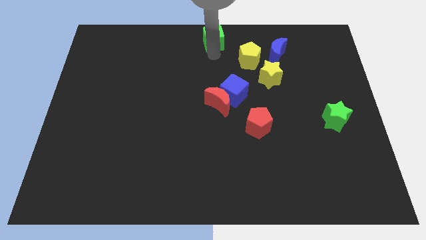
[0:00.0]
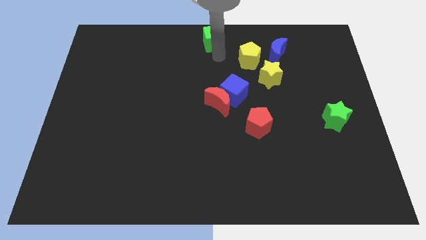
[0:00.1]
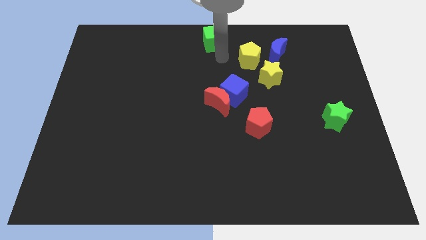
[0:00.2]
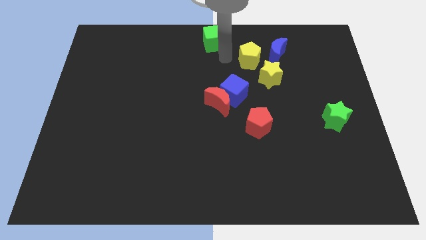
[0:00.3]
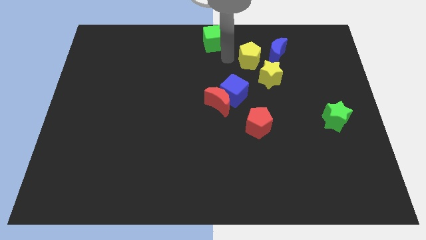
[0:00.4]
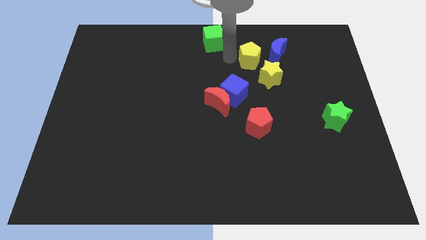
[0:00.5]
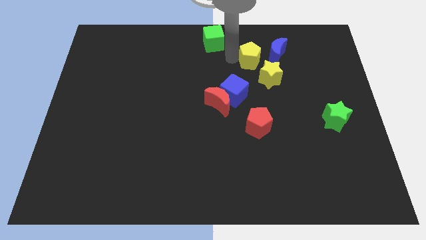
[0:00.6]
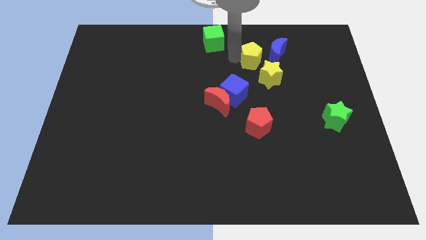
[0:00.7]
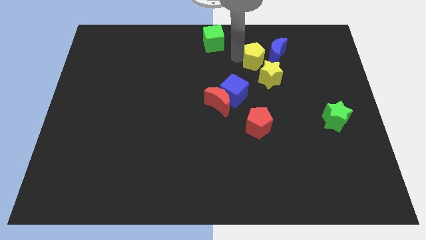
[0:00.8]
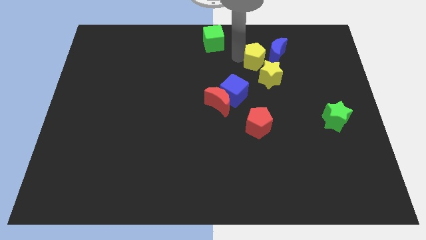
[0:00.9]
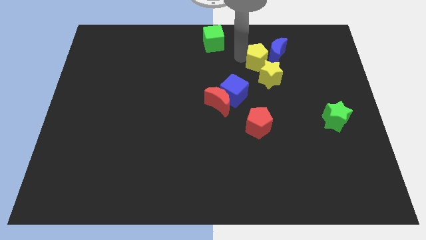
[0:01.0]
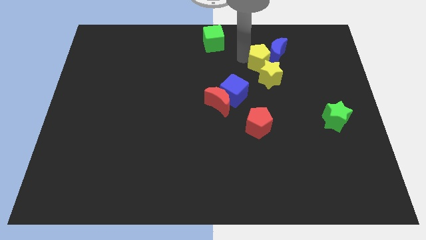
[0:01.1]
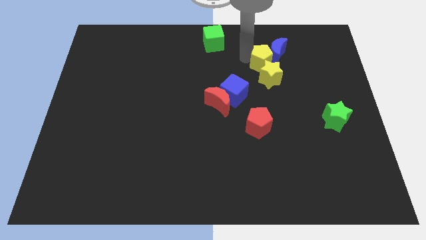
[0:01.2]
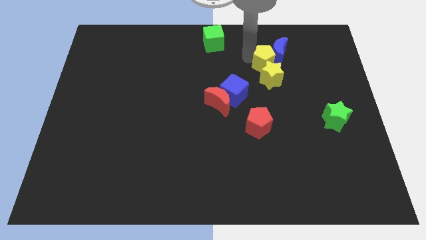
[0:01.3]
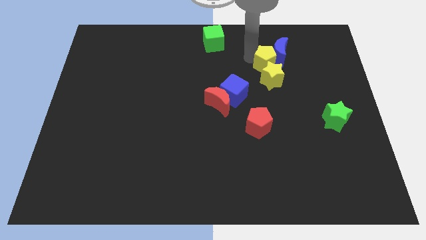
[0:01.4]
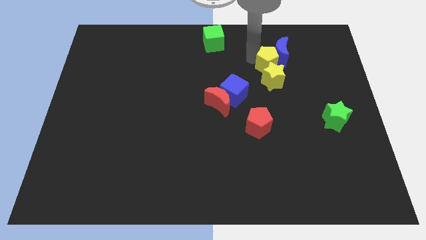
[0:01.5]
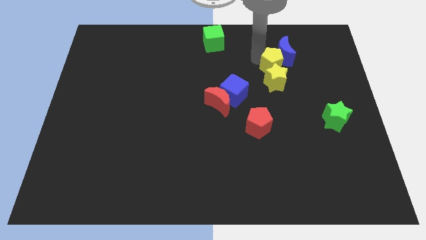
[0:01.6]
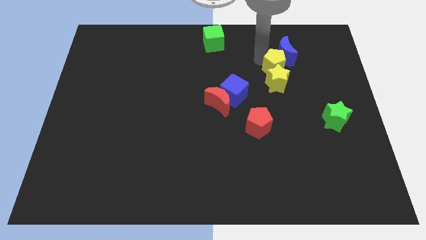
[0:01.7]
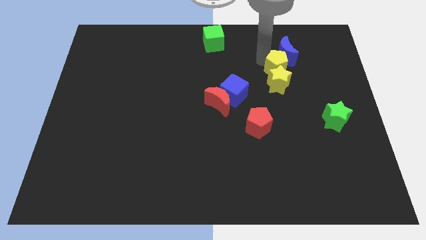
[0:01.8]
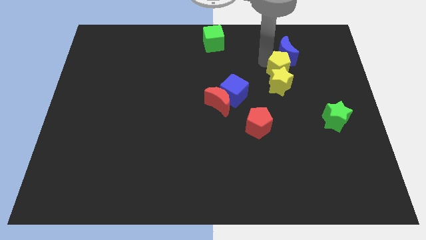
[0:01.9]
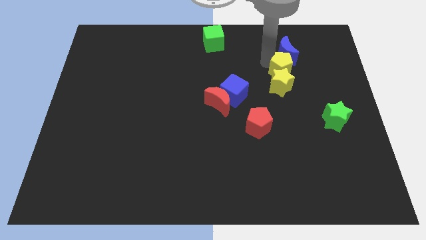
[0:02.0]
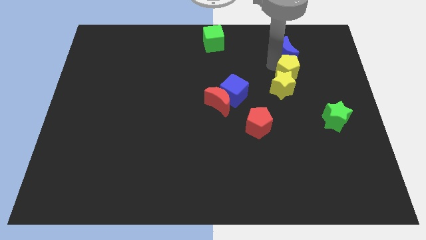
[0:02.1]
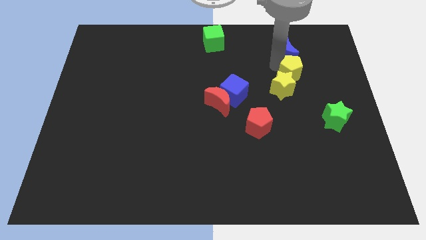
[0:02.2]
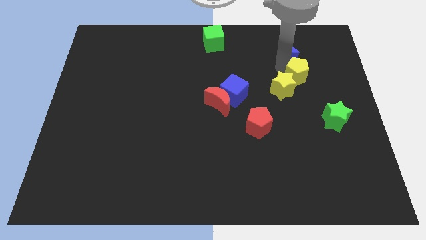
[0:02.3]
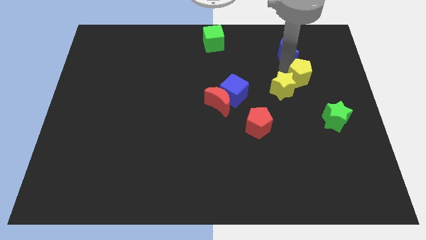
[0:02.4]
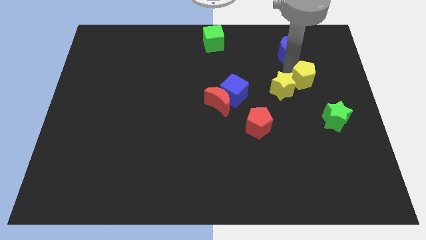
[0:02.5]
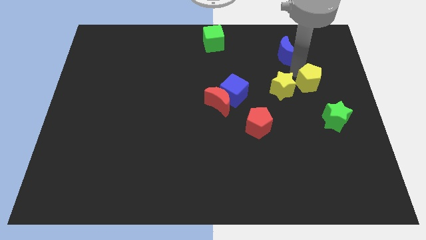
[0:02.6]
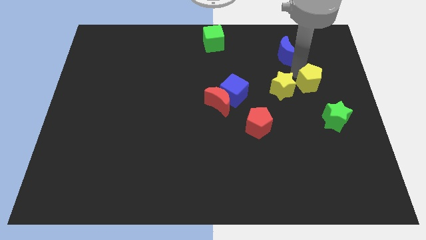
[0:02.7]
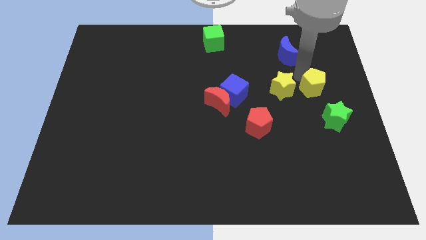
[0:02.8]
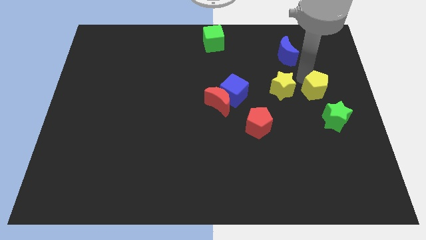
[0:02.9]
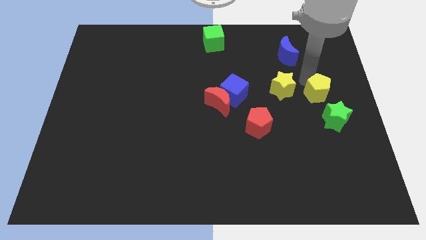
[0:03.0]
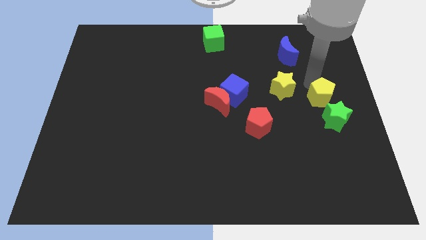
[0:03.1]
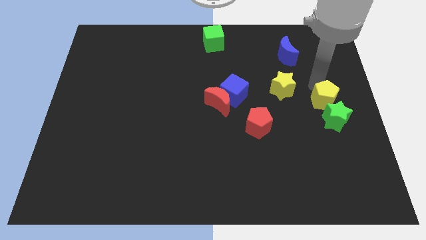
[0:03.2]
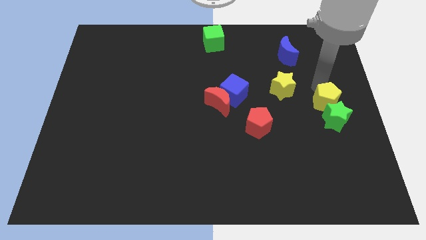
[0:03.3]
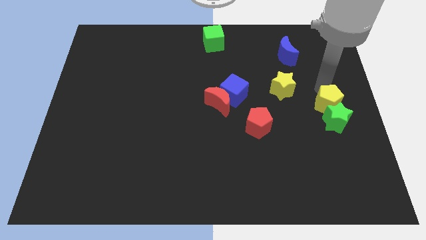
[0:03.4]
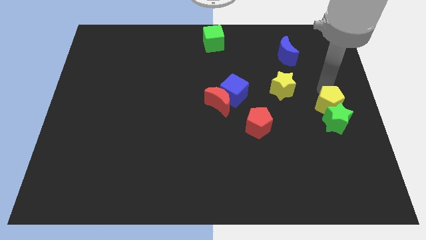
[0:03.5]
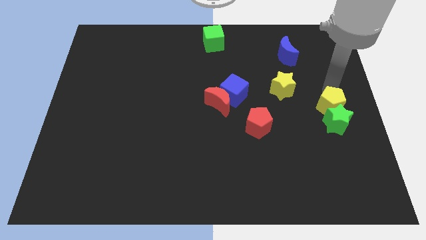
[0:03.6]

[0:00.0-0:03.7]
move yellow pentagon into green star

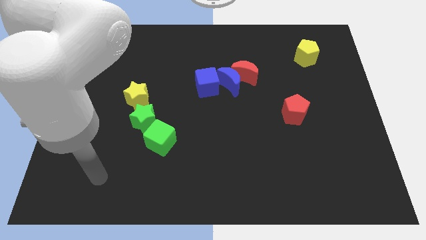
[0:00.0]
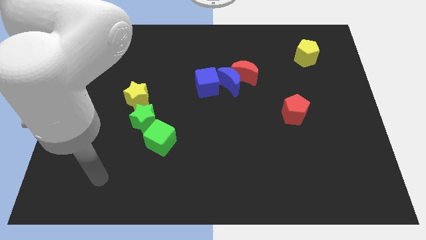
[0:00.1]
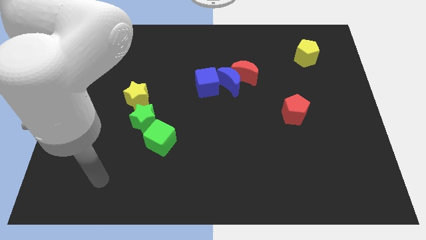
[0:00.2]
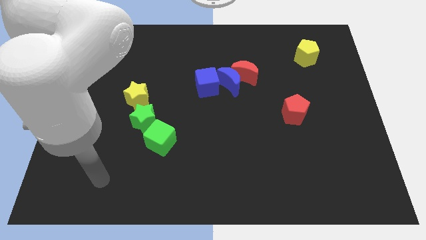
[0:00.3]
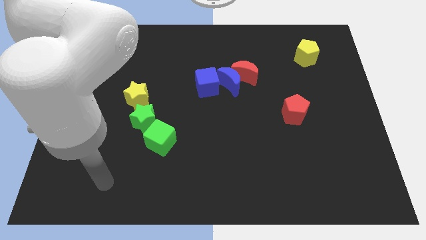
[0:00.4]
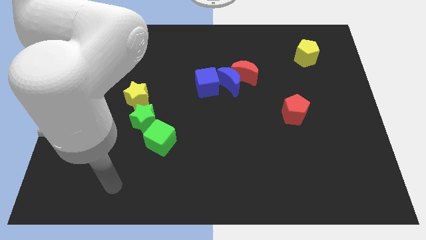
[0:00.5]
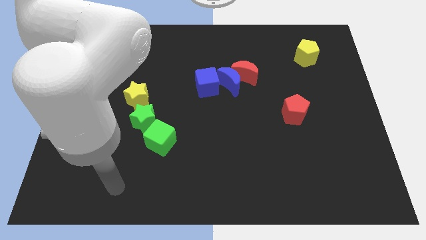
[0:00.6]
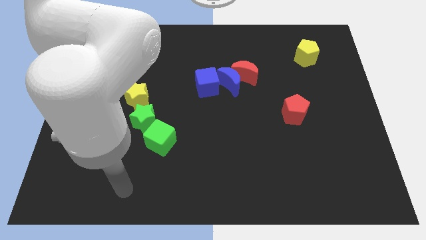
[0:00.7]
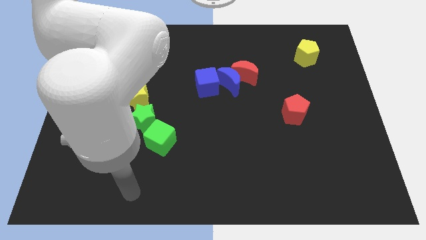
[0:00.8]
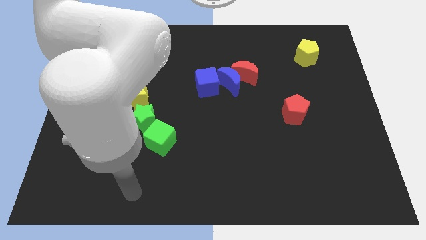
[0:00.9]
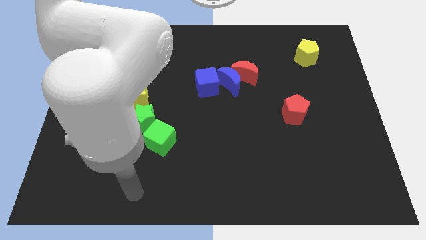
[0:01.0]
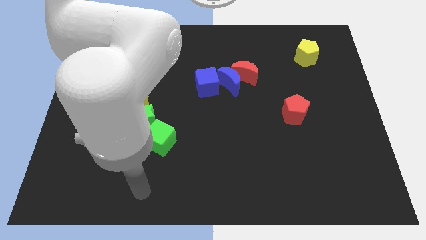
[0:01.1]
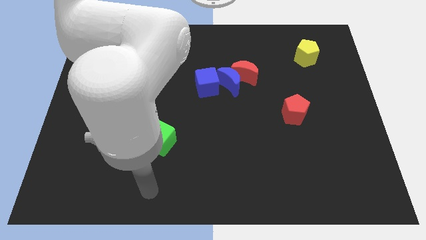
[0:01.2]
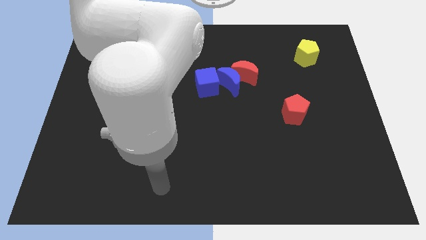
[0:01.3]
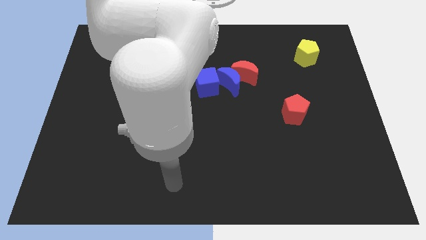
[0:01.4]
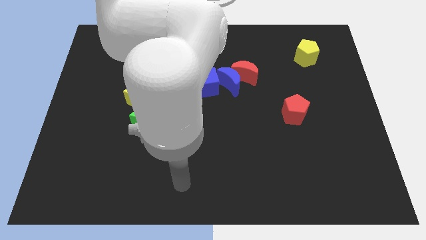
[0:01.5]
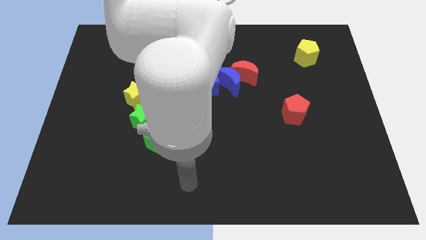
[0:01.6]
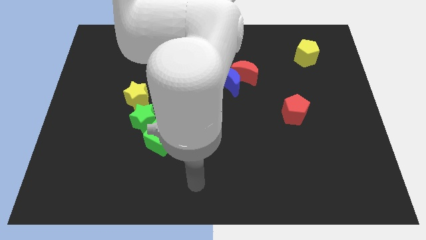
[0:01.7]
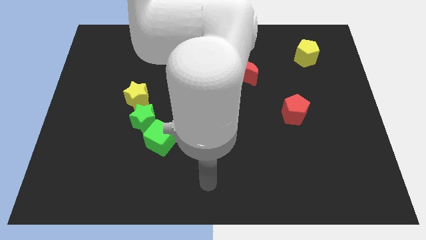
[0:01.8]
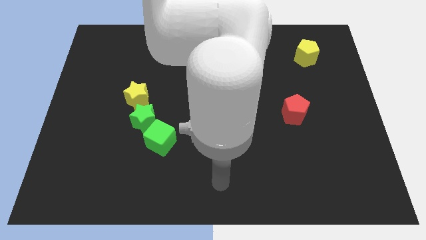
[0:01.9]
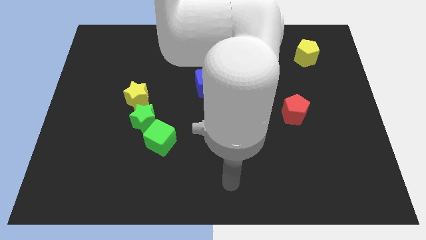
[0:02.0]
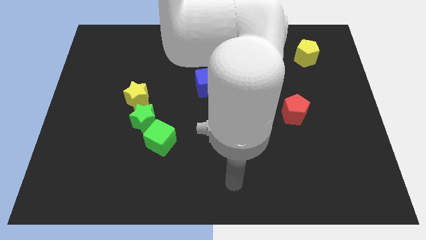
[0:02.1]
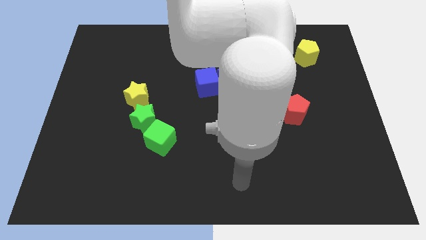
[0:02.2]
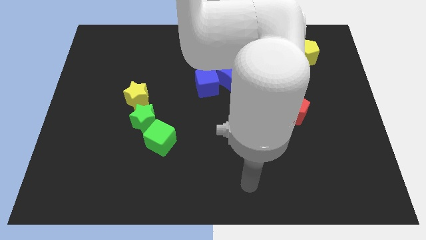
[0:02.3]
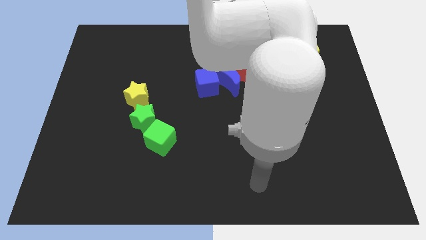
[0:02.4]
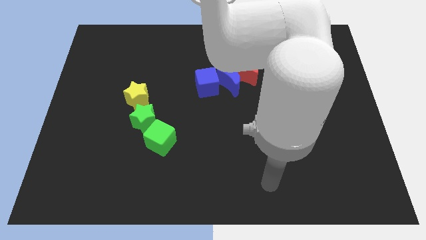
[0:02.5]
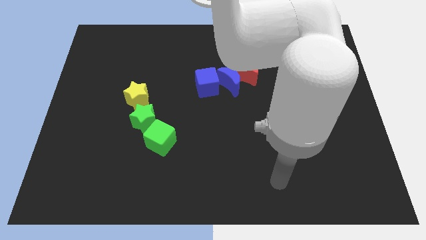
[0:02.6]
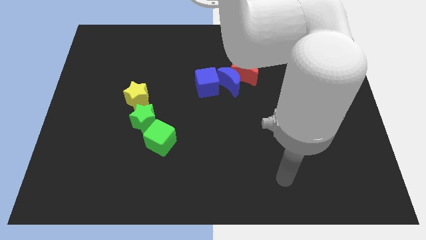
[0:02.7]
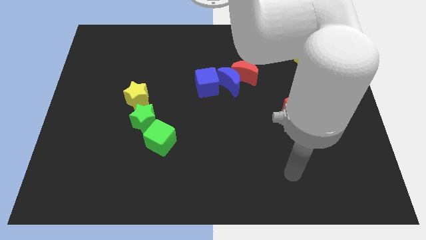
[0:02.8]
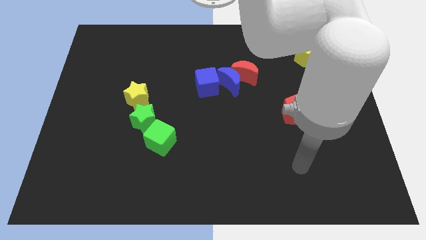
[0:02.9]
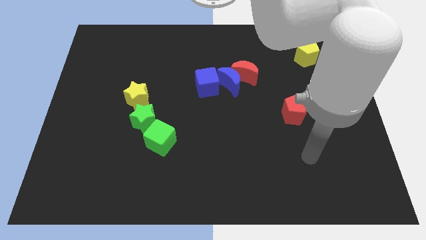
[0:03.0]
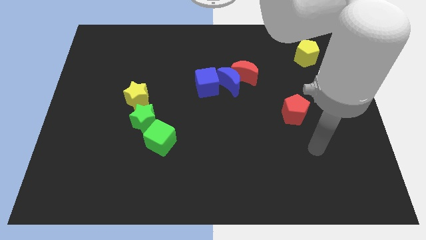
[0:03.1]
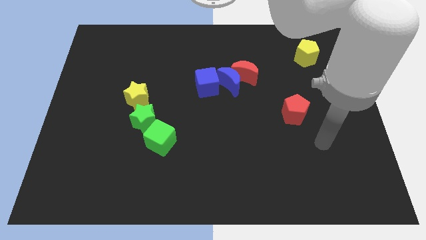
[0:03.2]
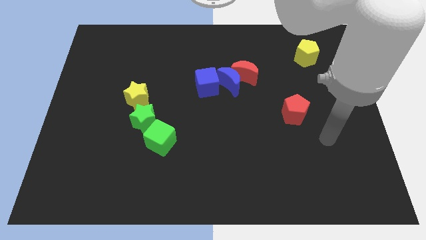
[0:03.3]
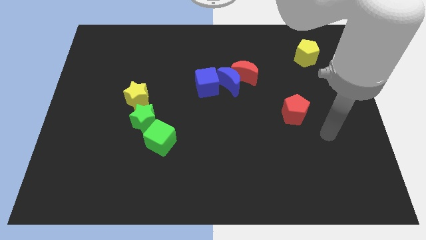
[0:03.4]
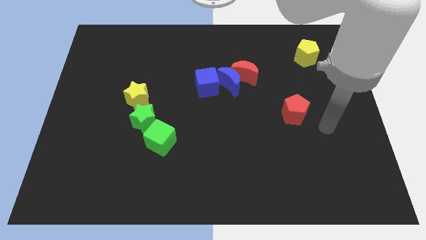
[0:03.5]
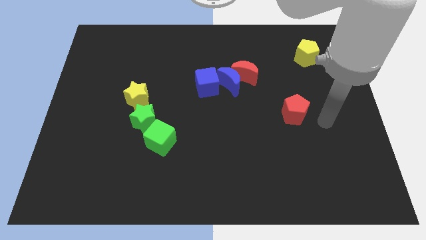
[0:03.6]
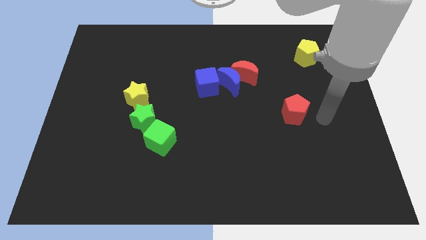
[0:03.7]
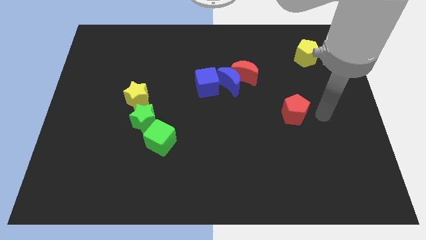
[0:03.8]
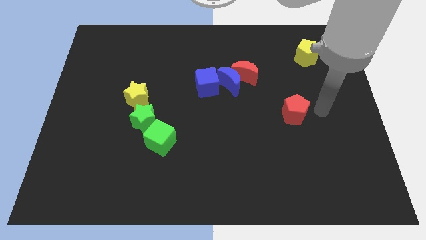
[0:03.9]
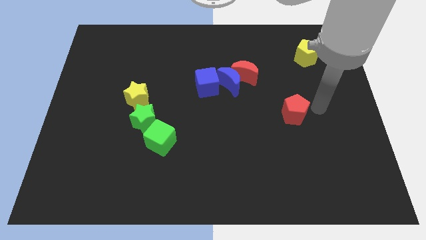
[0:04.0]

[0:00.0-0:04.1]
point the arm to the right of the red pentagon

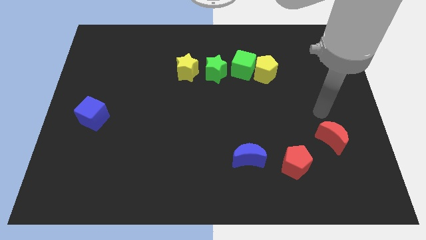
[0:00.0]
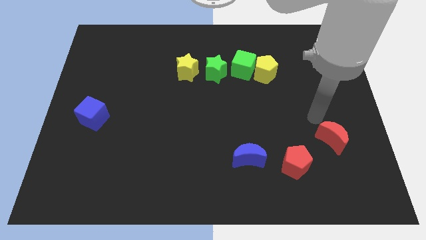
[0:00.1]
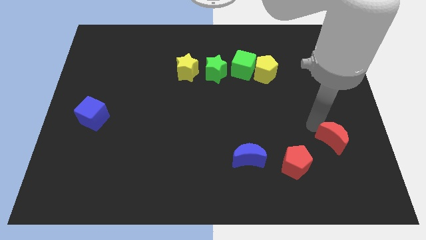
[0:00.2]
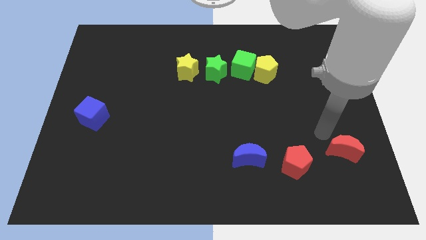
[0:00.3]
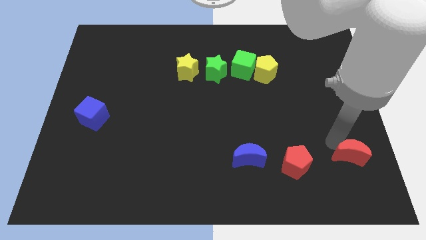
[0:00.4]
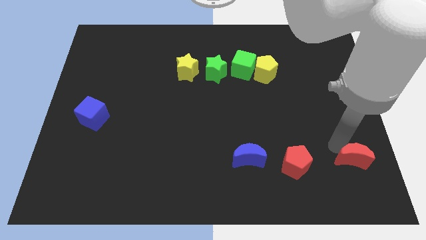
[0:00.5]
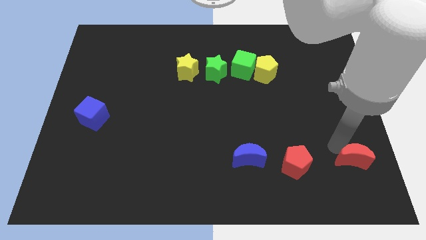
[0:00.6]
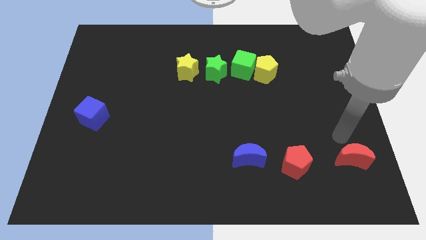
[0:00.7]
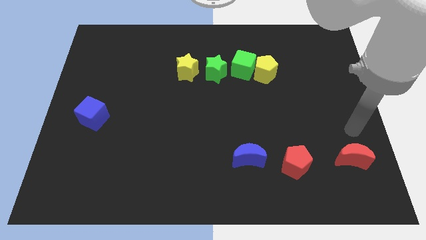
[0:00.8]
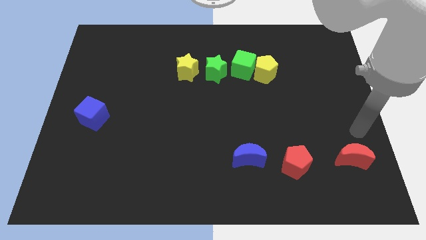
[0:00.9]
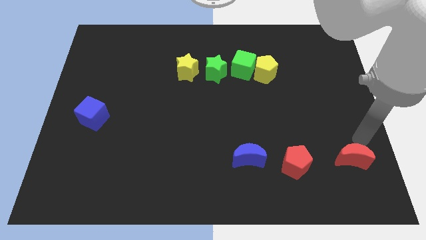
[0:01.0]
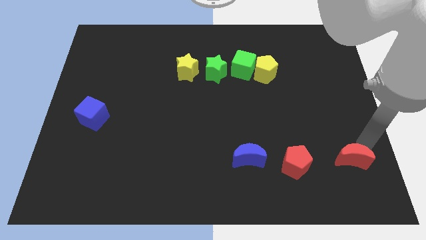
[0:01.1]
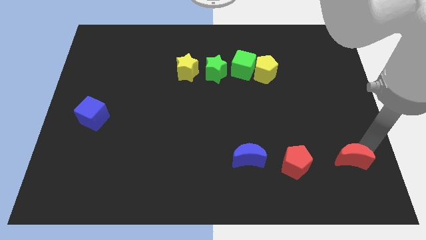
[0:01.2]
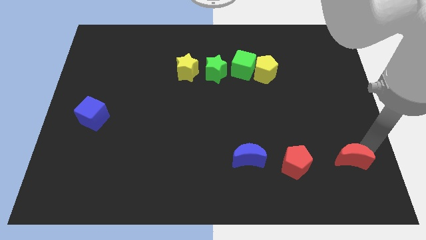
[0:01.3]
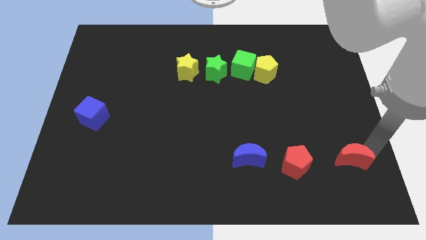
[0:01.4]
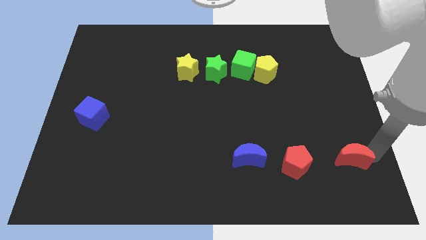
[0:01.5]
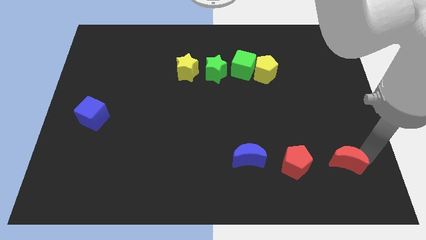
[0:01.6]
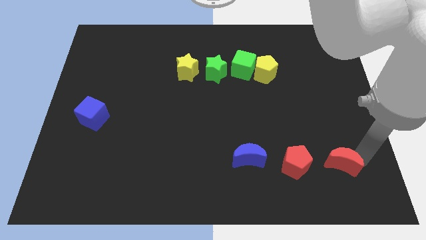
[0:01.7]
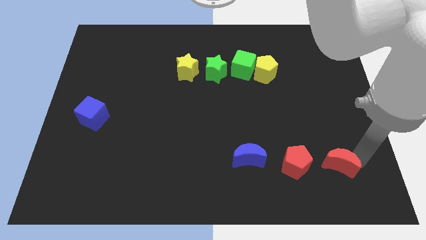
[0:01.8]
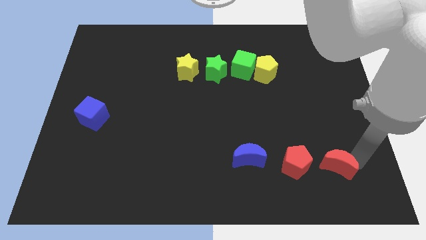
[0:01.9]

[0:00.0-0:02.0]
make the red crescent right to the red pentagon
